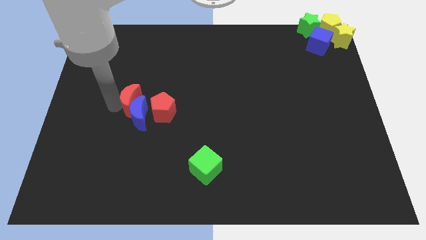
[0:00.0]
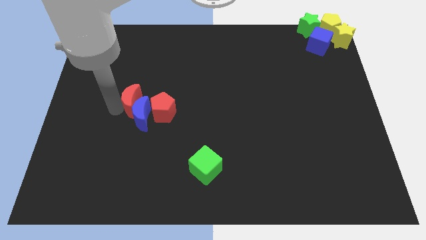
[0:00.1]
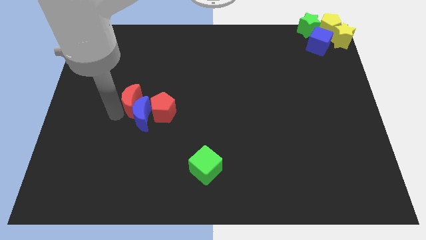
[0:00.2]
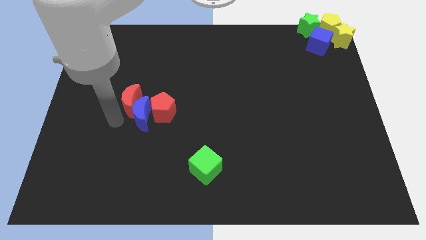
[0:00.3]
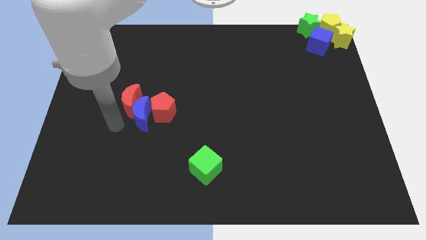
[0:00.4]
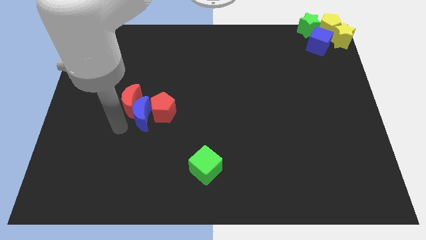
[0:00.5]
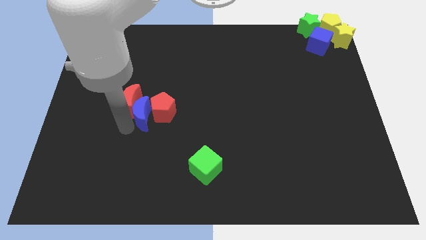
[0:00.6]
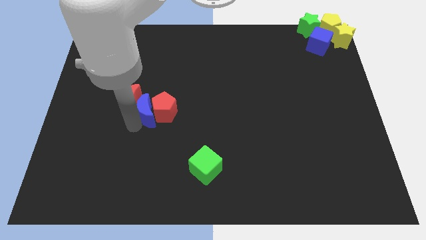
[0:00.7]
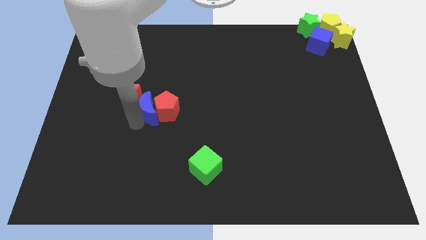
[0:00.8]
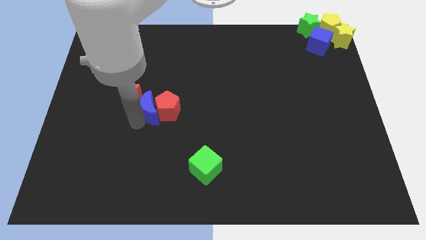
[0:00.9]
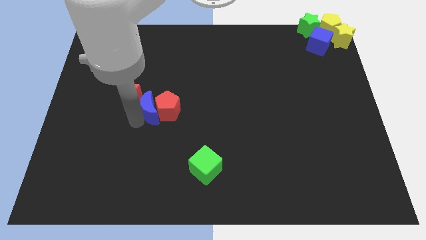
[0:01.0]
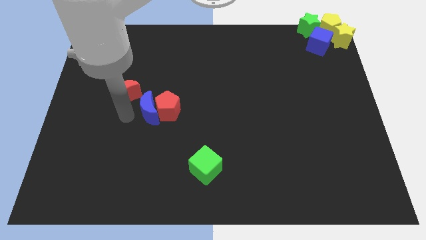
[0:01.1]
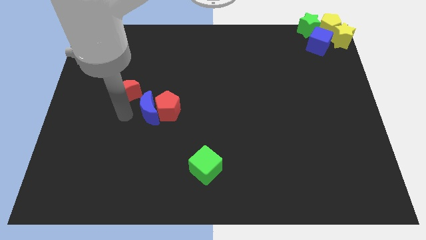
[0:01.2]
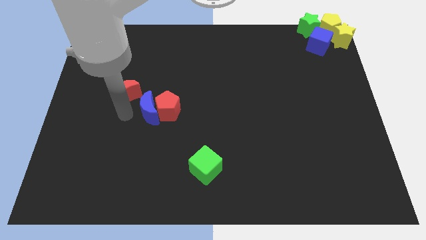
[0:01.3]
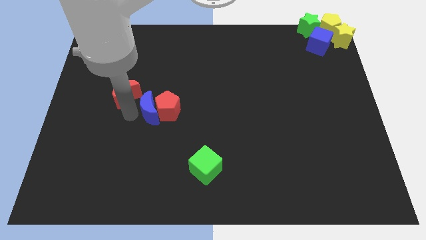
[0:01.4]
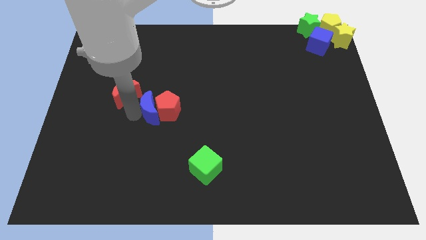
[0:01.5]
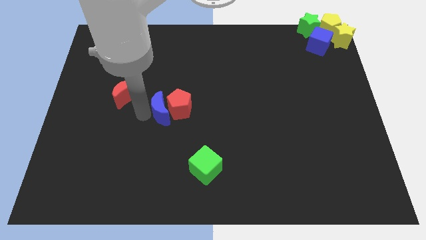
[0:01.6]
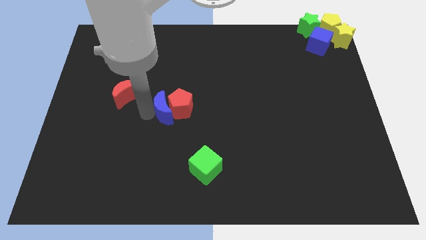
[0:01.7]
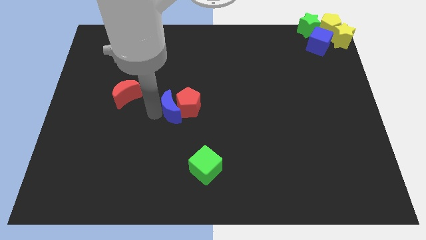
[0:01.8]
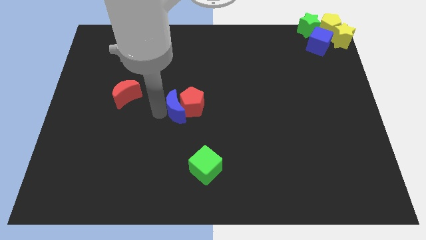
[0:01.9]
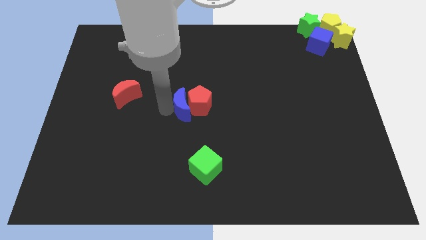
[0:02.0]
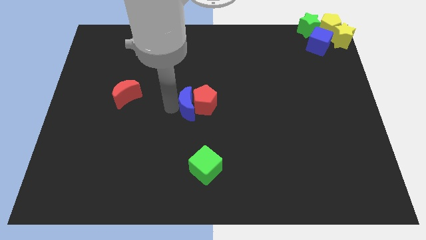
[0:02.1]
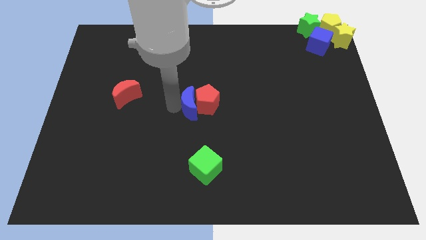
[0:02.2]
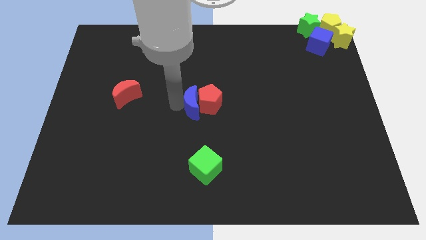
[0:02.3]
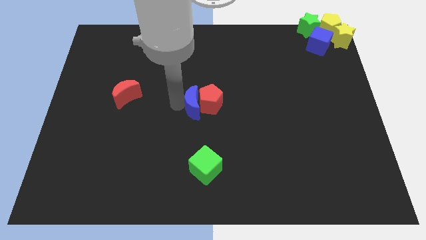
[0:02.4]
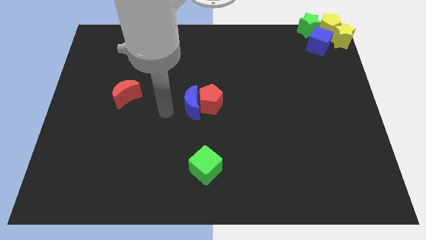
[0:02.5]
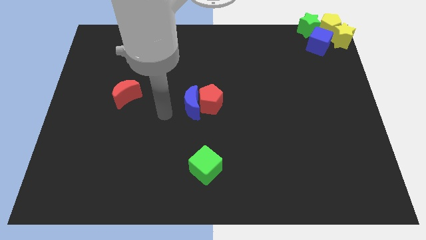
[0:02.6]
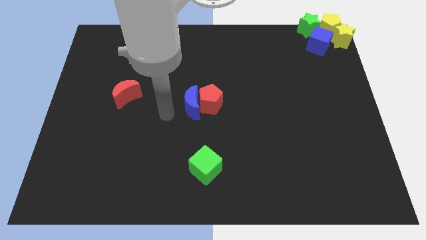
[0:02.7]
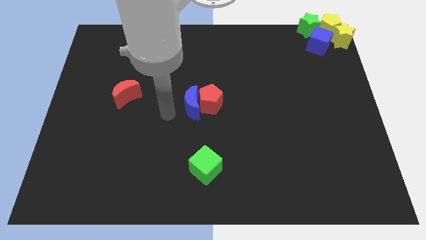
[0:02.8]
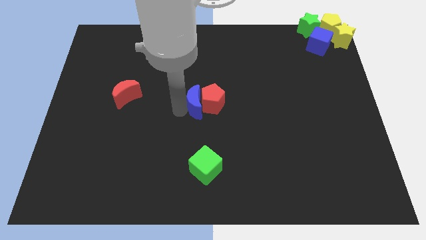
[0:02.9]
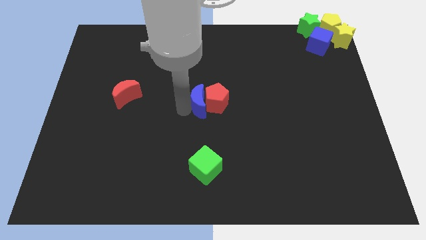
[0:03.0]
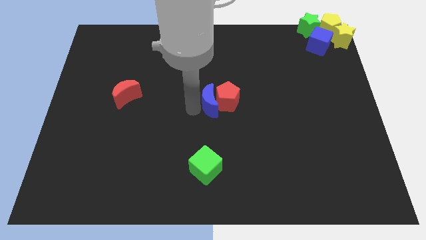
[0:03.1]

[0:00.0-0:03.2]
push blue moon above green cube

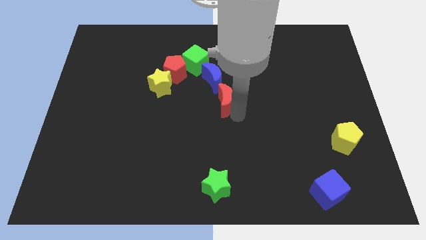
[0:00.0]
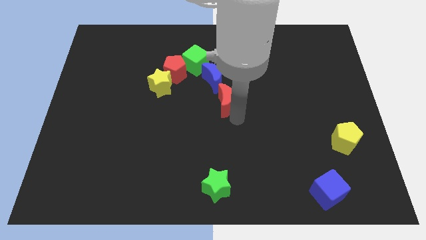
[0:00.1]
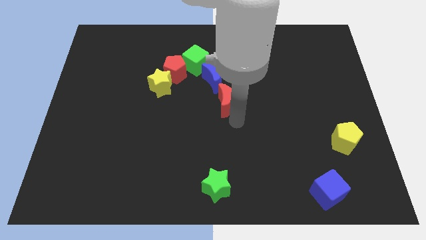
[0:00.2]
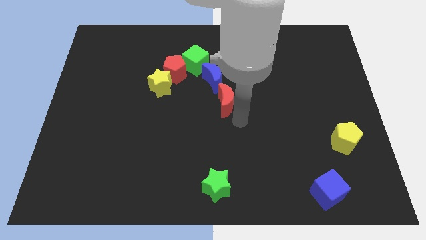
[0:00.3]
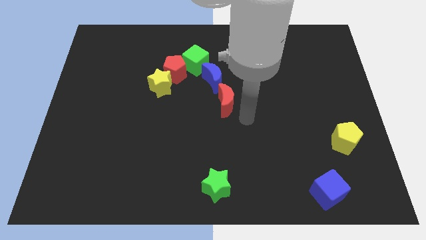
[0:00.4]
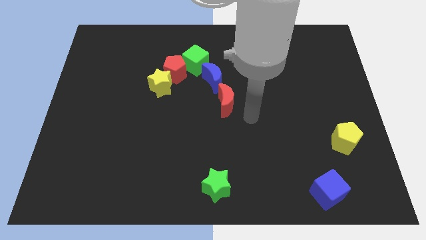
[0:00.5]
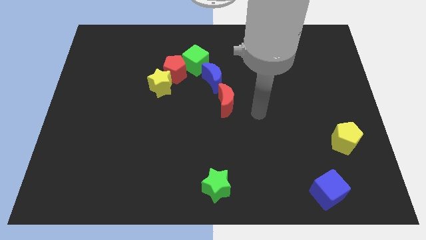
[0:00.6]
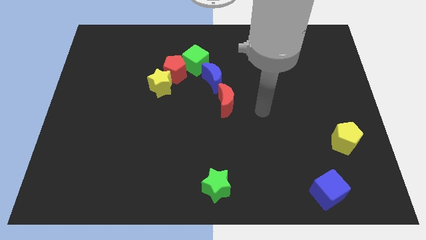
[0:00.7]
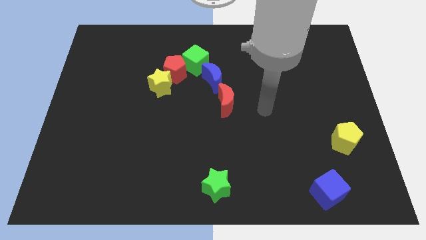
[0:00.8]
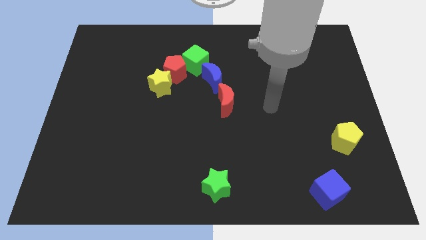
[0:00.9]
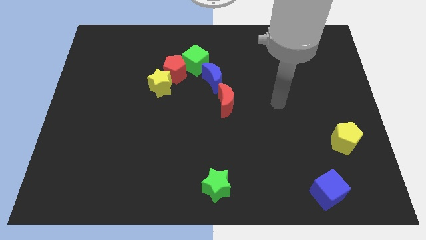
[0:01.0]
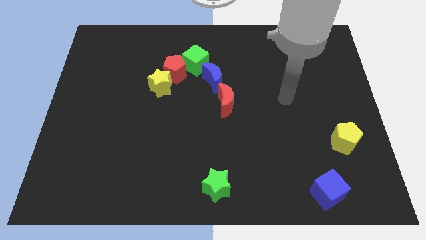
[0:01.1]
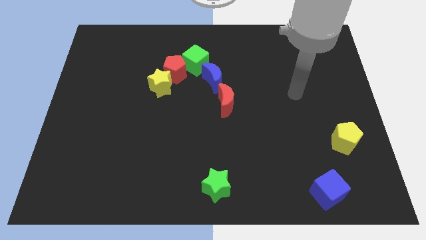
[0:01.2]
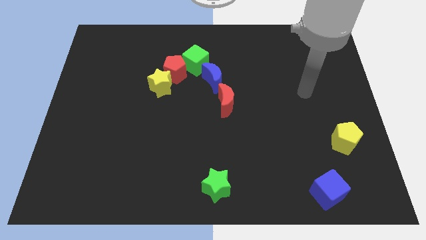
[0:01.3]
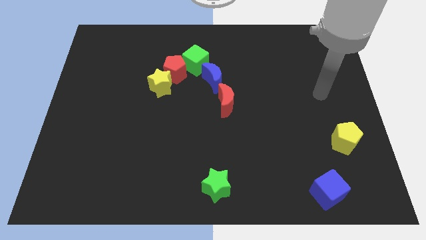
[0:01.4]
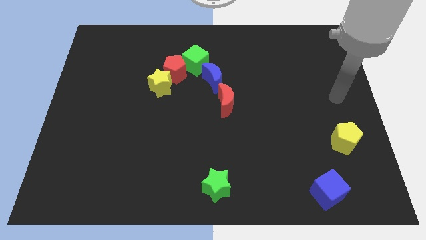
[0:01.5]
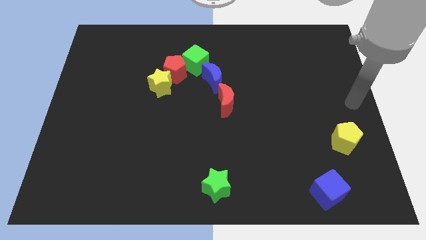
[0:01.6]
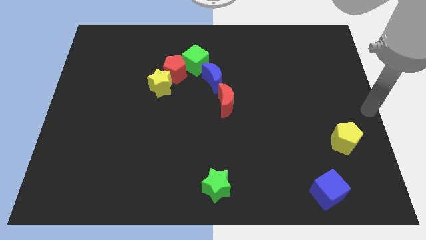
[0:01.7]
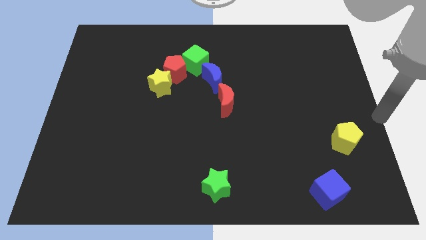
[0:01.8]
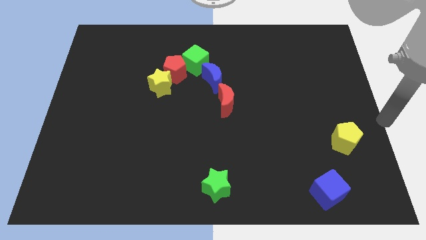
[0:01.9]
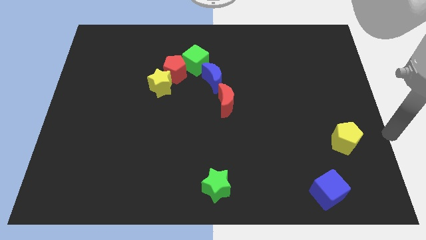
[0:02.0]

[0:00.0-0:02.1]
move your arm away from the red moon

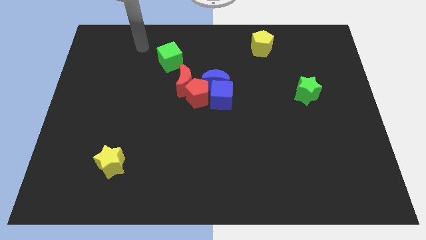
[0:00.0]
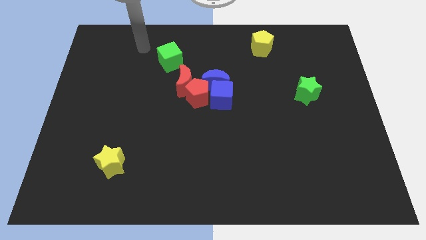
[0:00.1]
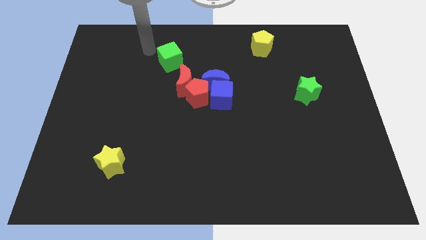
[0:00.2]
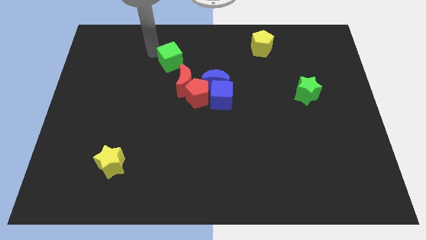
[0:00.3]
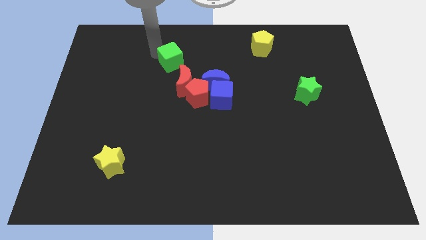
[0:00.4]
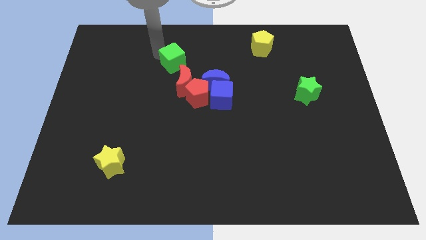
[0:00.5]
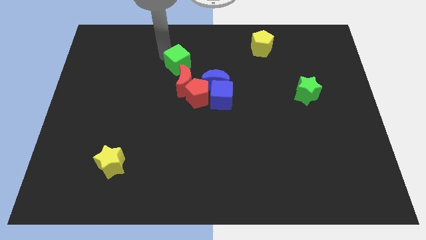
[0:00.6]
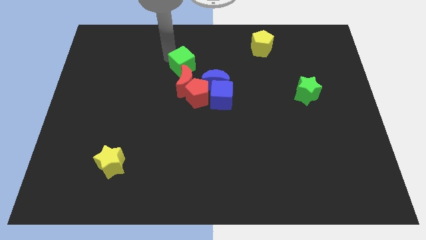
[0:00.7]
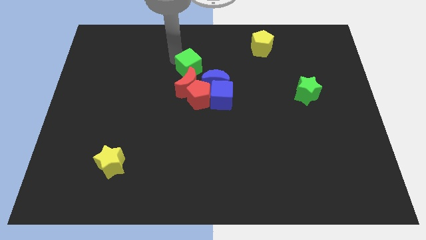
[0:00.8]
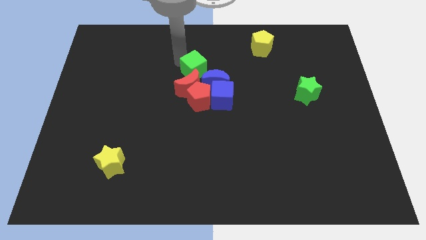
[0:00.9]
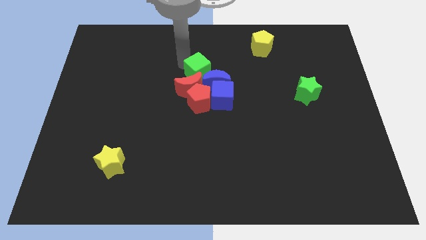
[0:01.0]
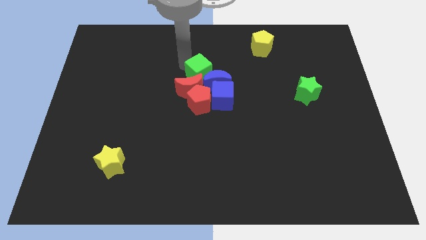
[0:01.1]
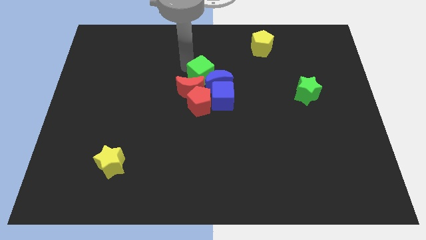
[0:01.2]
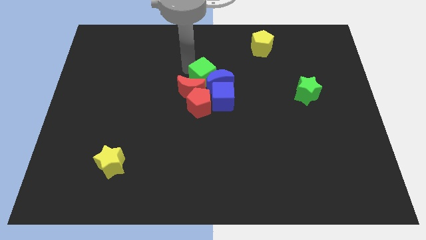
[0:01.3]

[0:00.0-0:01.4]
push green cube towards blue crescent

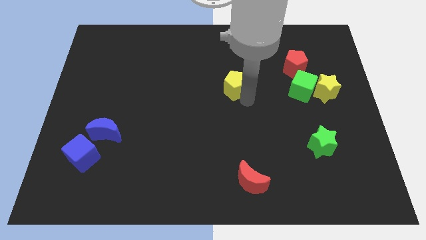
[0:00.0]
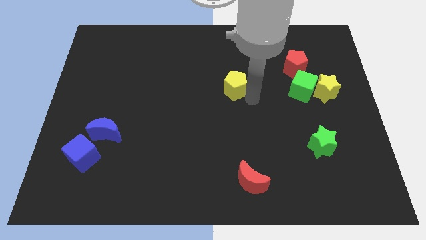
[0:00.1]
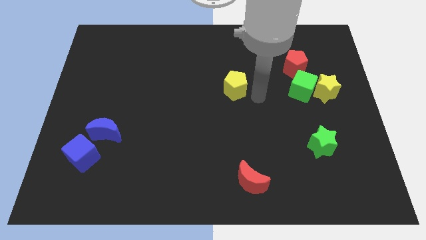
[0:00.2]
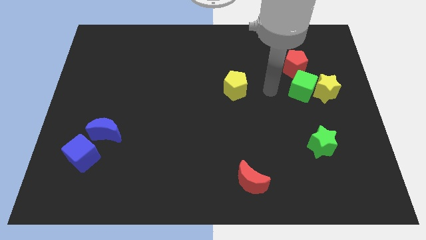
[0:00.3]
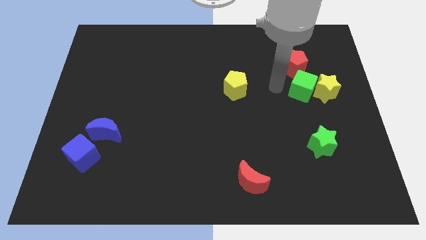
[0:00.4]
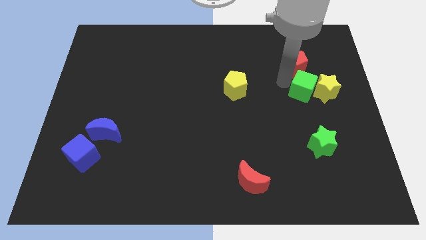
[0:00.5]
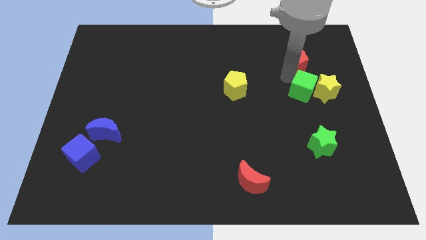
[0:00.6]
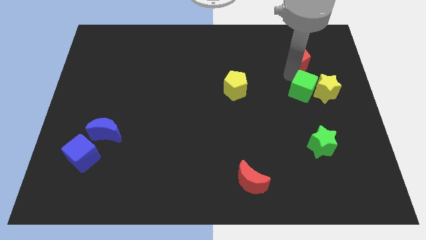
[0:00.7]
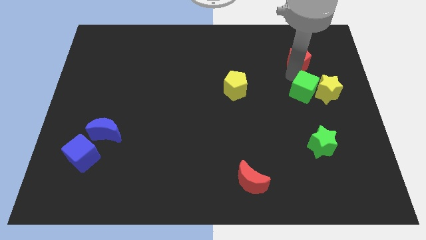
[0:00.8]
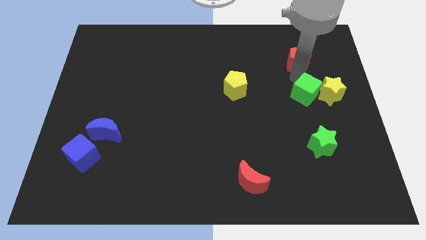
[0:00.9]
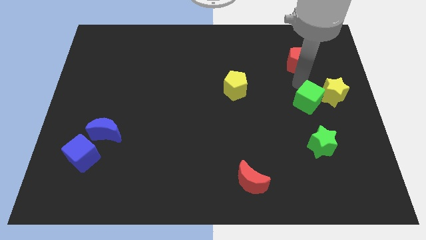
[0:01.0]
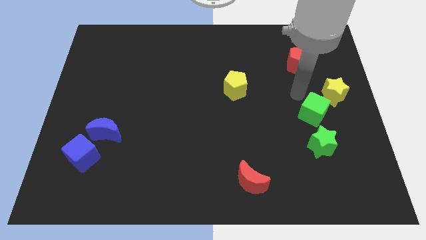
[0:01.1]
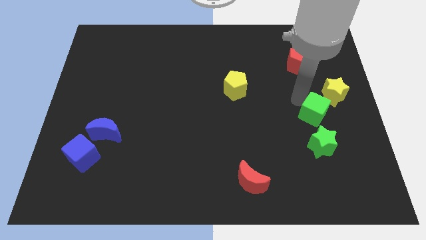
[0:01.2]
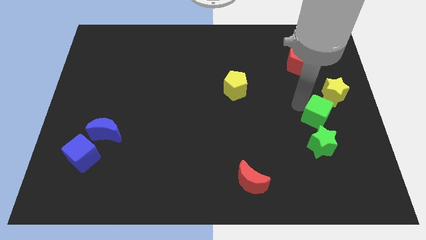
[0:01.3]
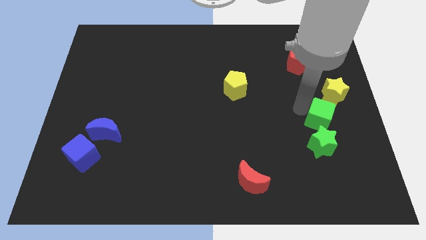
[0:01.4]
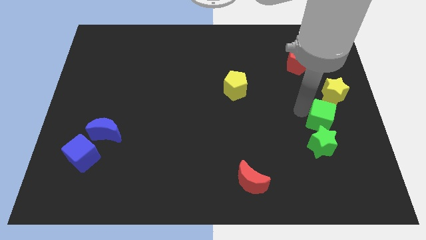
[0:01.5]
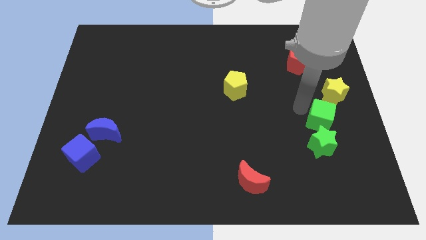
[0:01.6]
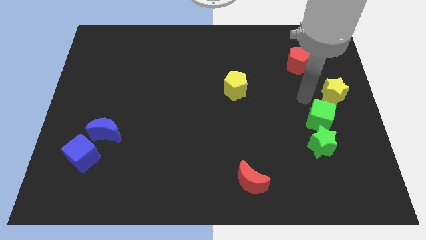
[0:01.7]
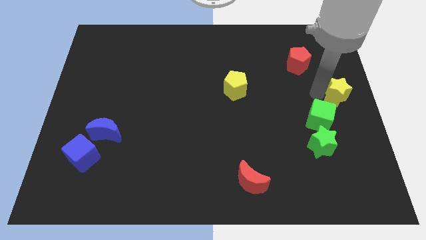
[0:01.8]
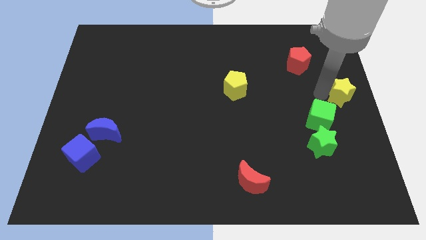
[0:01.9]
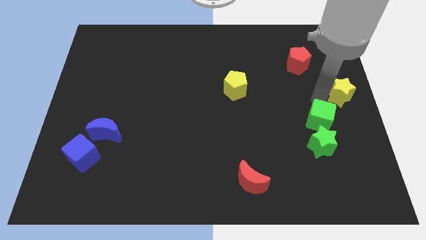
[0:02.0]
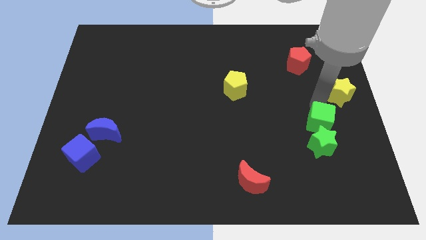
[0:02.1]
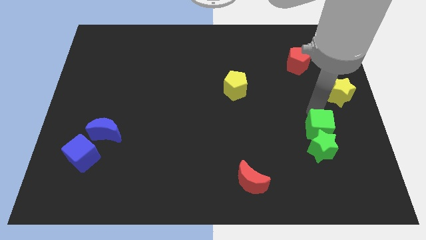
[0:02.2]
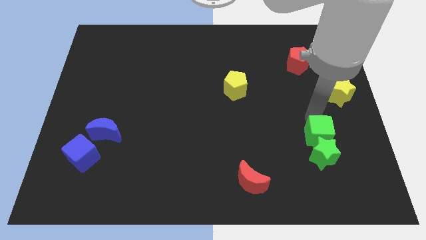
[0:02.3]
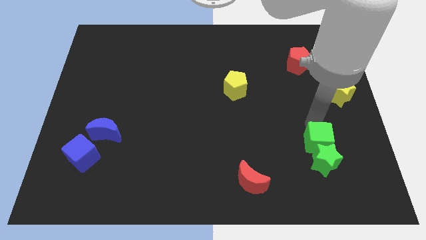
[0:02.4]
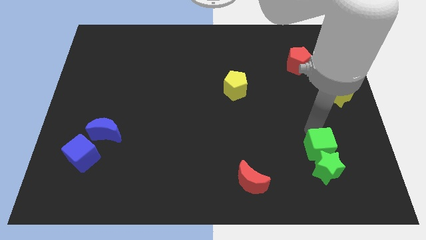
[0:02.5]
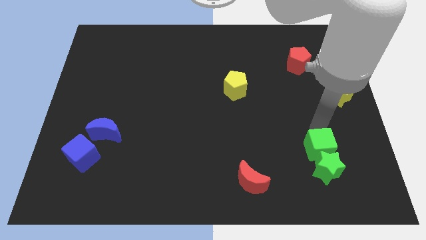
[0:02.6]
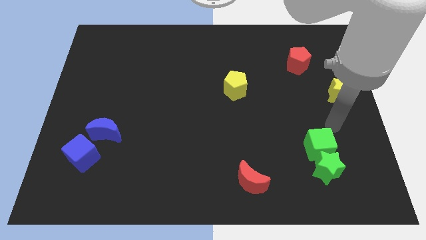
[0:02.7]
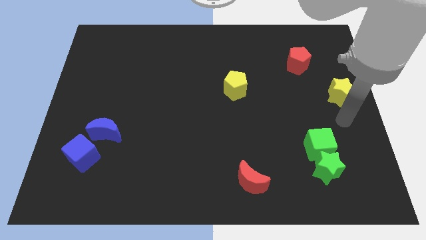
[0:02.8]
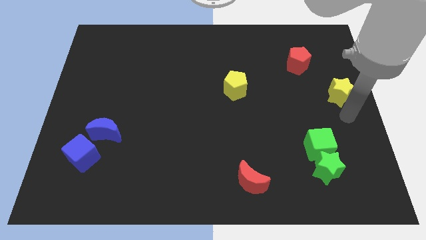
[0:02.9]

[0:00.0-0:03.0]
move the green star with green cube
